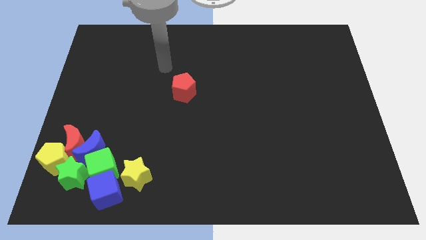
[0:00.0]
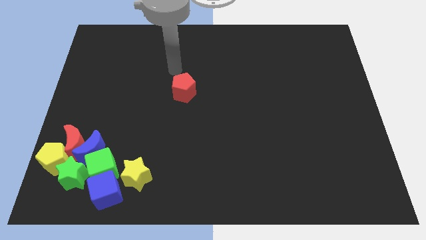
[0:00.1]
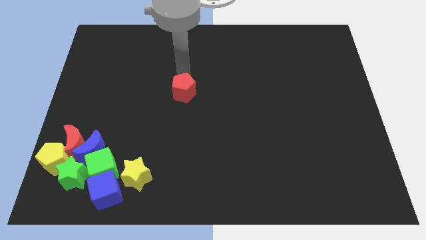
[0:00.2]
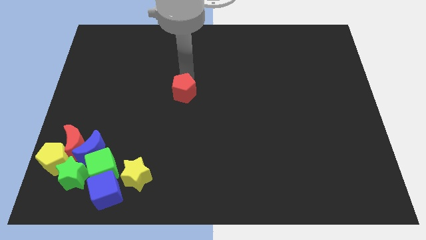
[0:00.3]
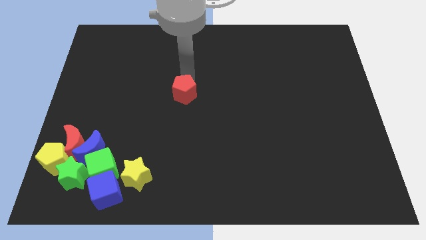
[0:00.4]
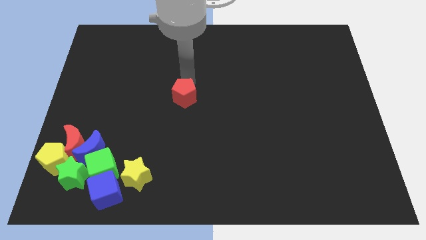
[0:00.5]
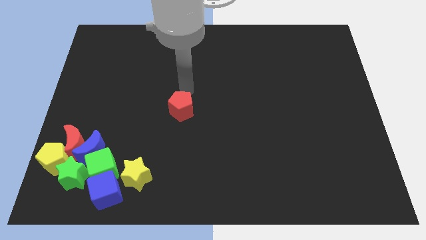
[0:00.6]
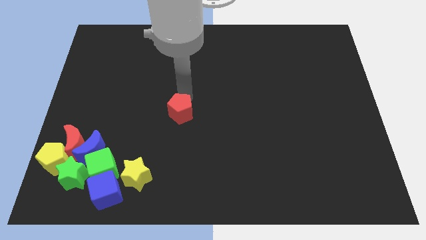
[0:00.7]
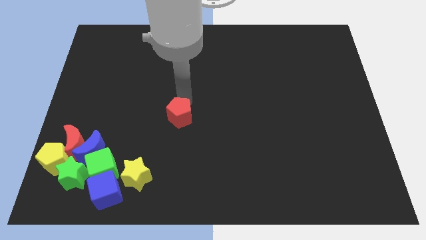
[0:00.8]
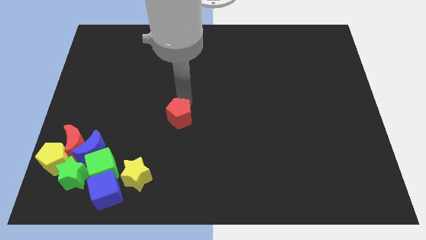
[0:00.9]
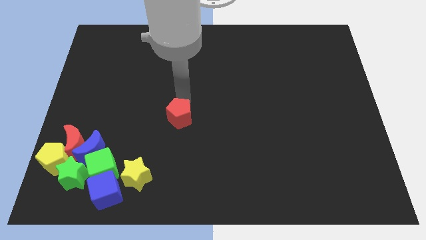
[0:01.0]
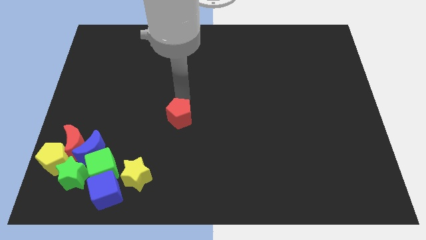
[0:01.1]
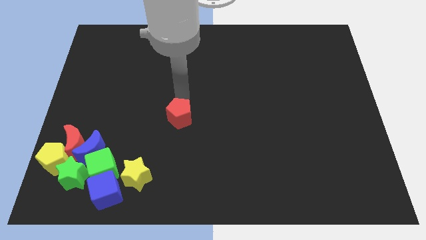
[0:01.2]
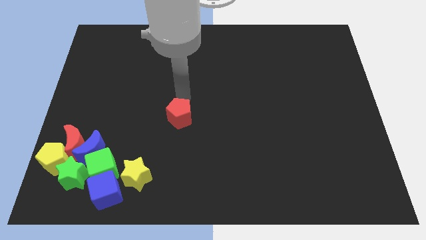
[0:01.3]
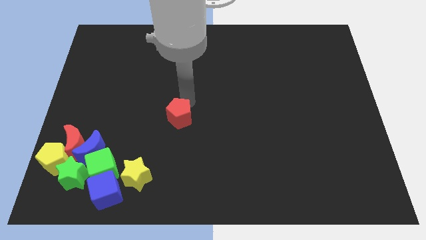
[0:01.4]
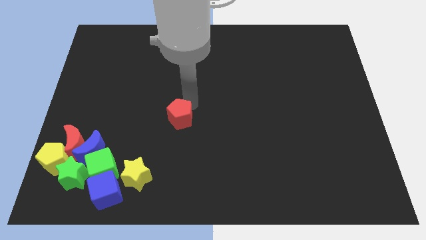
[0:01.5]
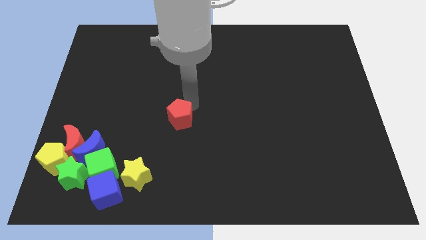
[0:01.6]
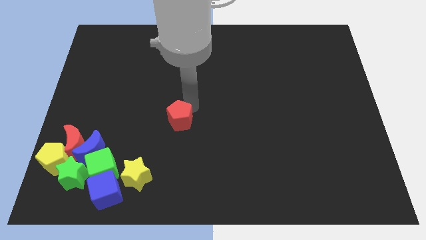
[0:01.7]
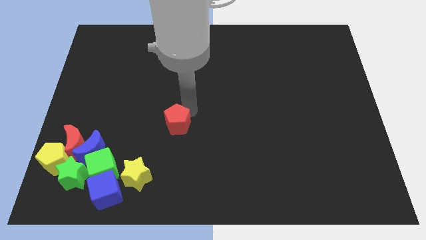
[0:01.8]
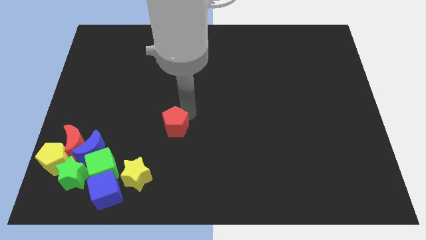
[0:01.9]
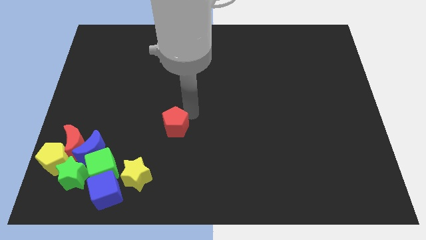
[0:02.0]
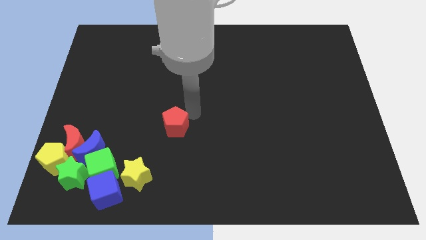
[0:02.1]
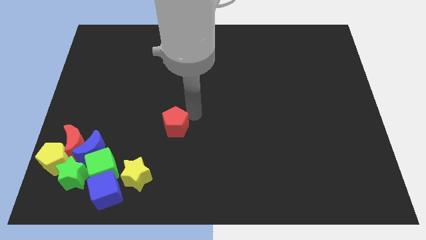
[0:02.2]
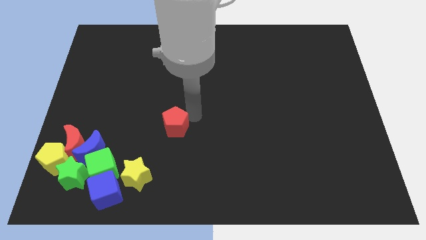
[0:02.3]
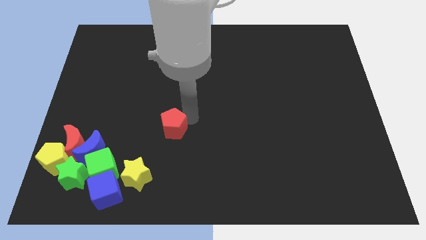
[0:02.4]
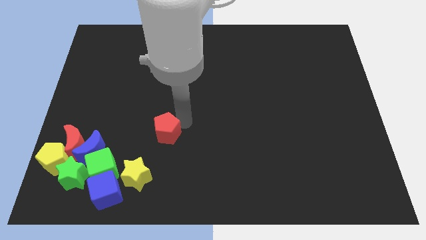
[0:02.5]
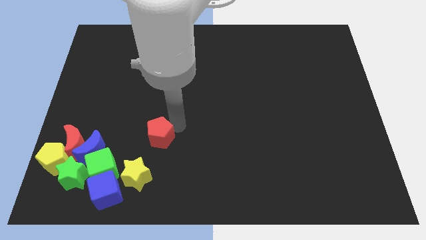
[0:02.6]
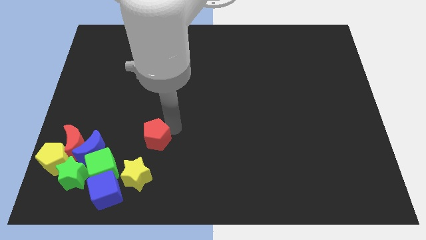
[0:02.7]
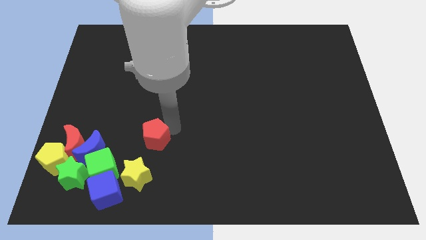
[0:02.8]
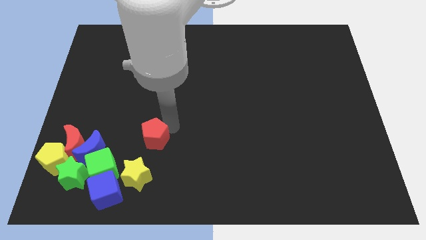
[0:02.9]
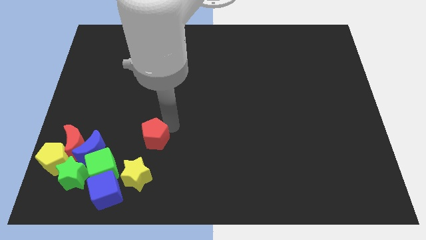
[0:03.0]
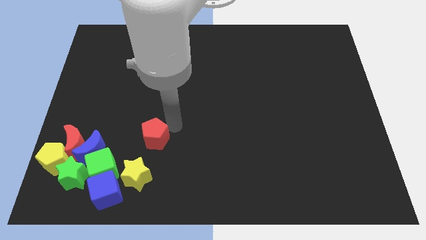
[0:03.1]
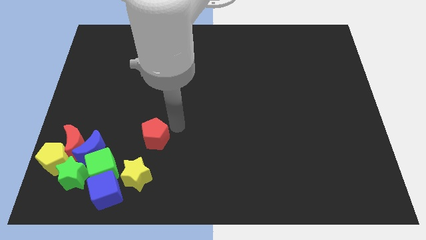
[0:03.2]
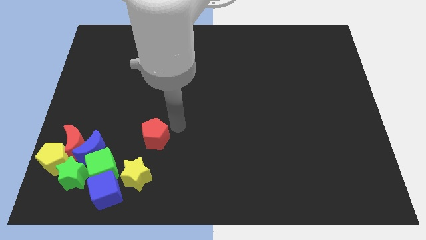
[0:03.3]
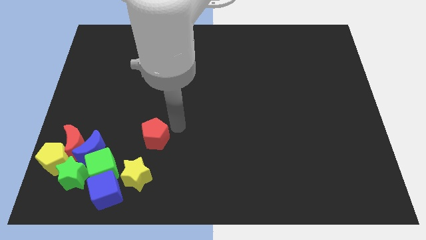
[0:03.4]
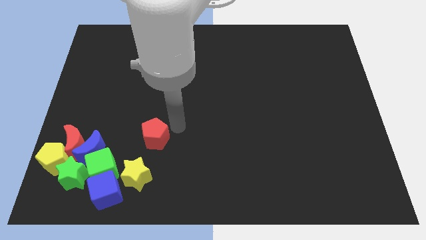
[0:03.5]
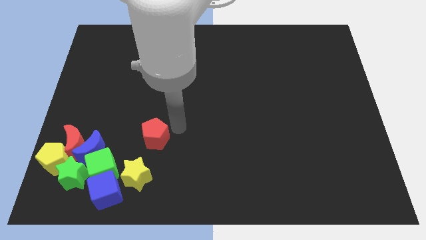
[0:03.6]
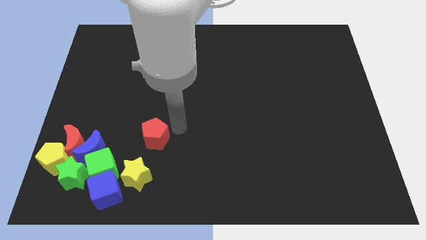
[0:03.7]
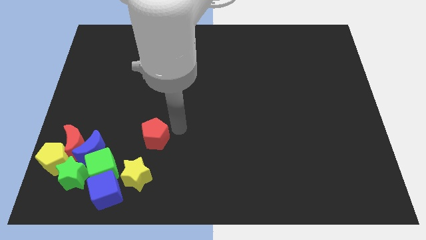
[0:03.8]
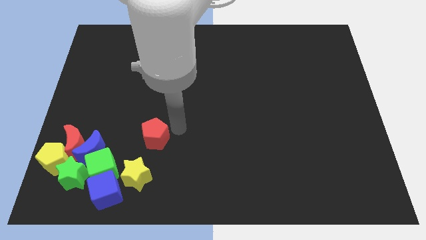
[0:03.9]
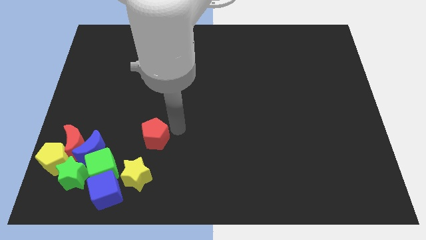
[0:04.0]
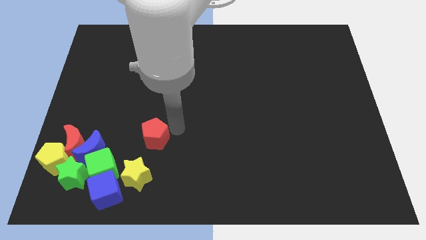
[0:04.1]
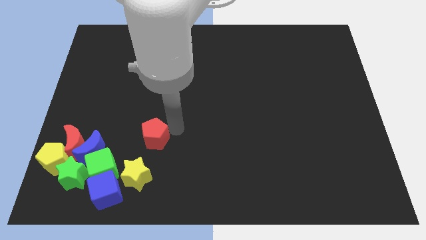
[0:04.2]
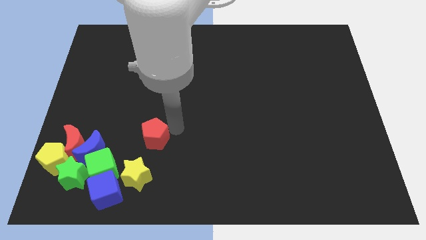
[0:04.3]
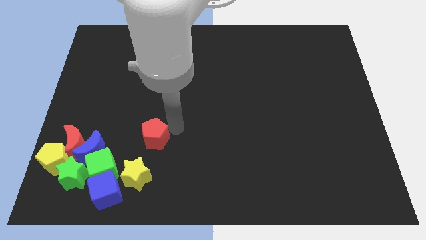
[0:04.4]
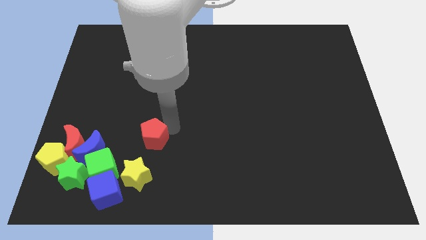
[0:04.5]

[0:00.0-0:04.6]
place the red pentagon on top of the yellow star

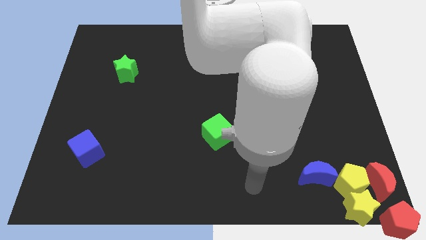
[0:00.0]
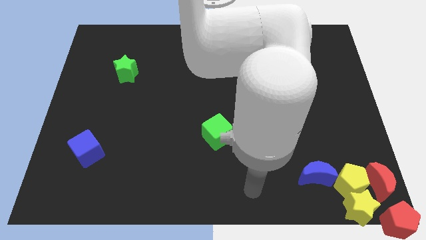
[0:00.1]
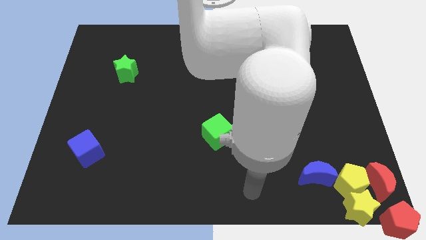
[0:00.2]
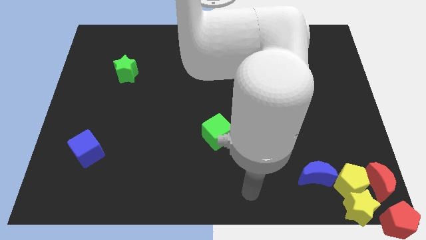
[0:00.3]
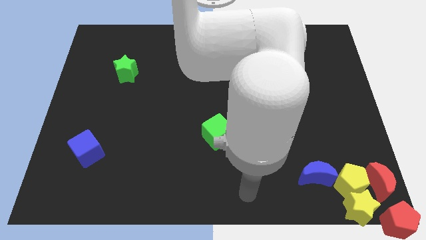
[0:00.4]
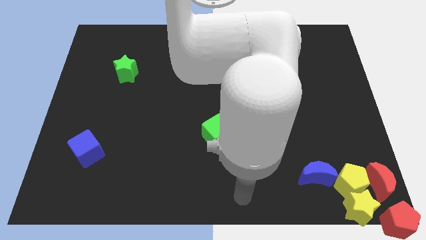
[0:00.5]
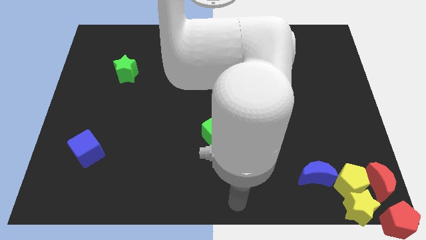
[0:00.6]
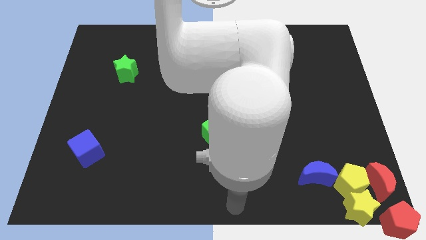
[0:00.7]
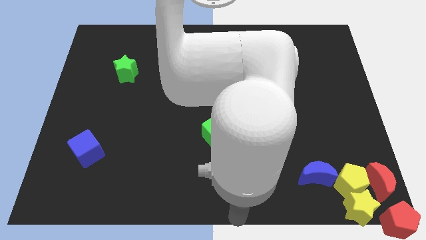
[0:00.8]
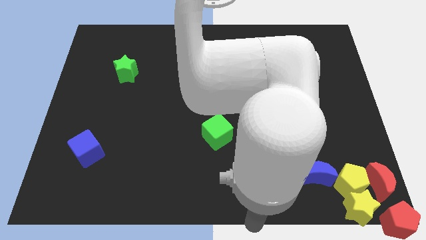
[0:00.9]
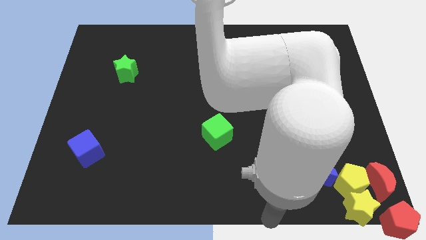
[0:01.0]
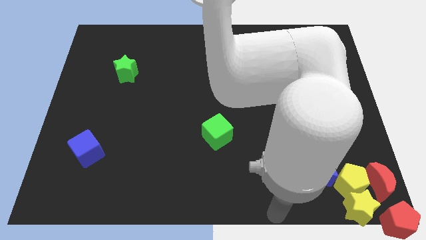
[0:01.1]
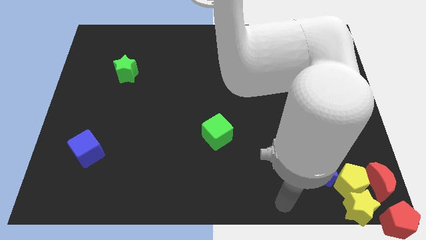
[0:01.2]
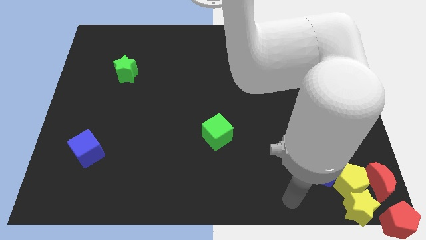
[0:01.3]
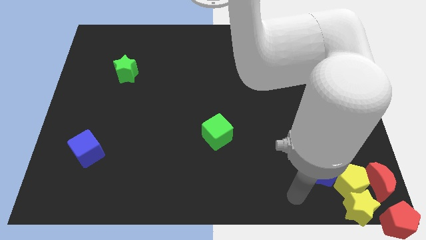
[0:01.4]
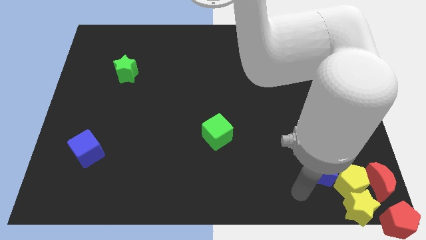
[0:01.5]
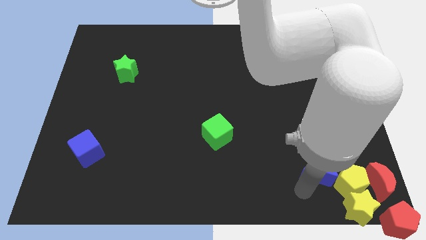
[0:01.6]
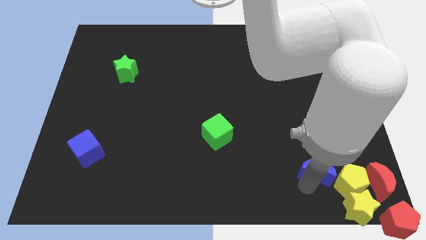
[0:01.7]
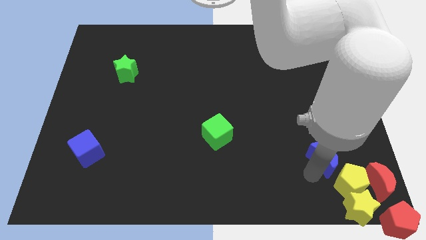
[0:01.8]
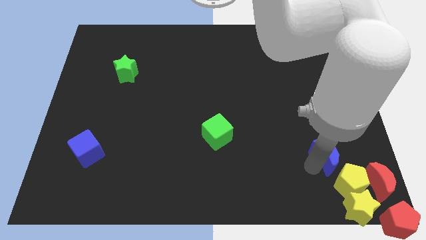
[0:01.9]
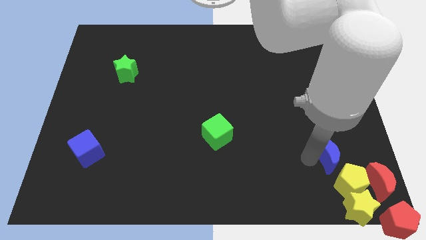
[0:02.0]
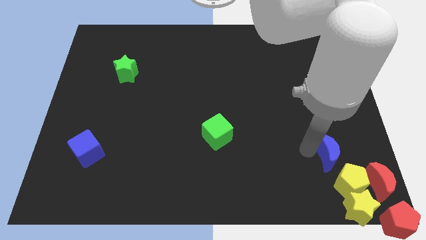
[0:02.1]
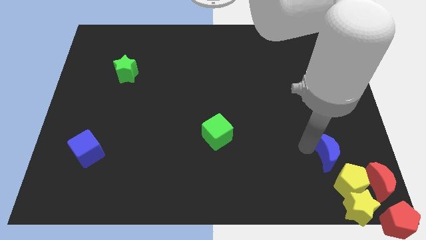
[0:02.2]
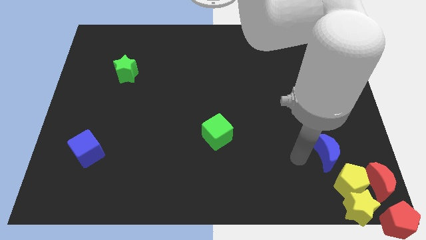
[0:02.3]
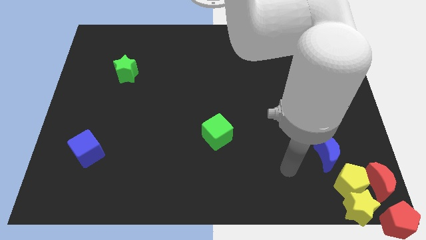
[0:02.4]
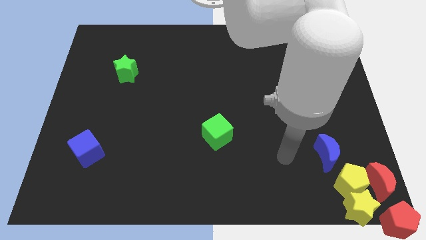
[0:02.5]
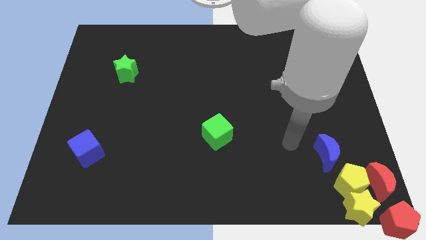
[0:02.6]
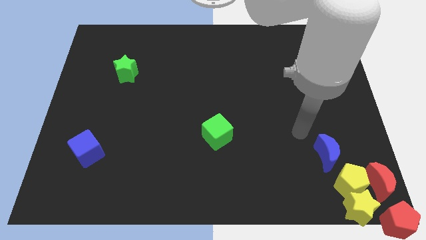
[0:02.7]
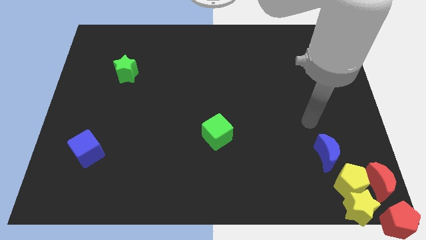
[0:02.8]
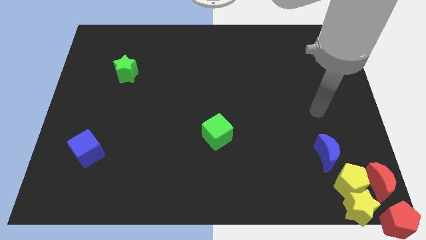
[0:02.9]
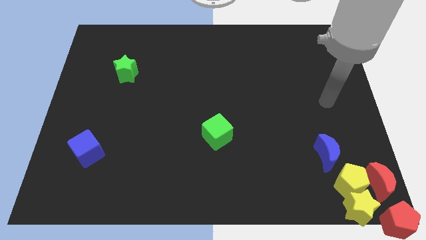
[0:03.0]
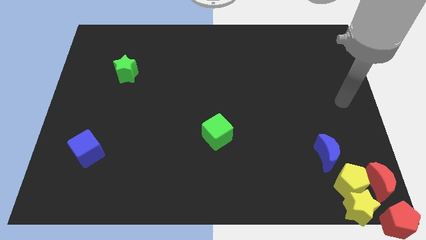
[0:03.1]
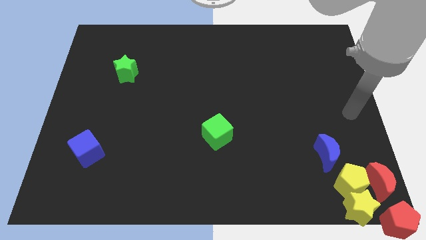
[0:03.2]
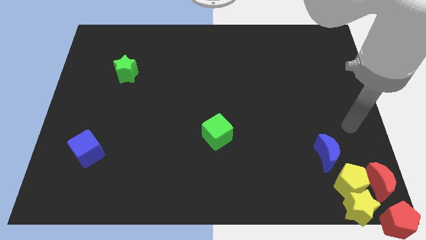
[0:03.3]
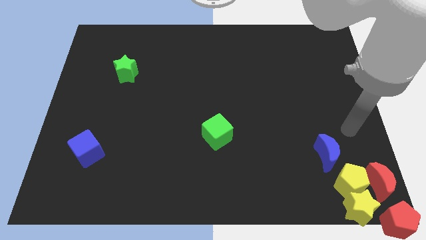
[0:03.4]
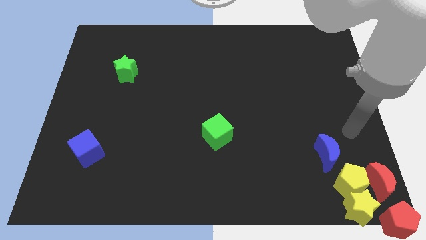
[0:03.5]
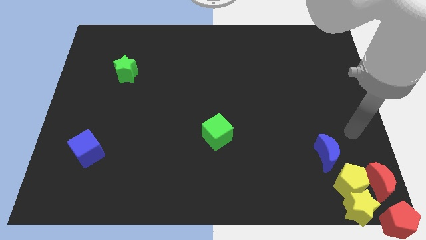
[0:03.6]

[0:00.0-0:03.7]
move the blue moon left above the yellow pentagon

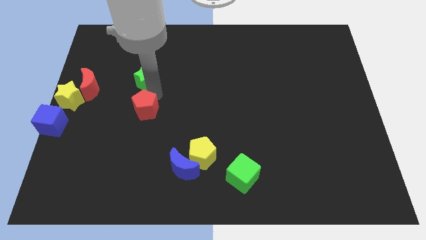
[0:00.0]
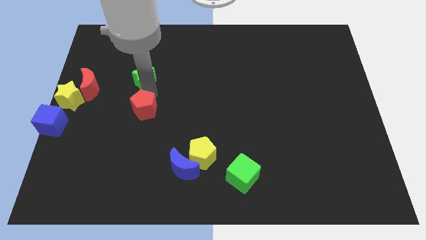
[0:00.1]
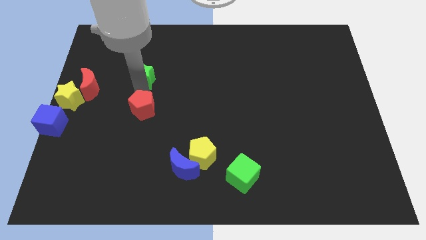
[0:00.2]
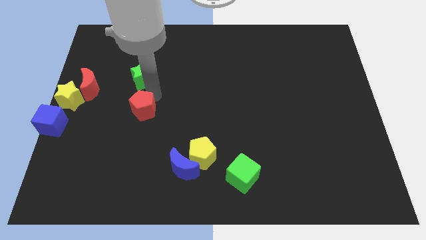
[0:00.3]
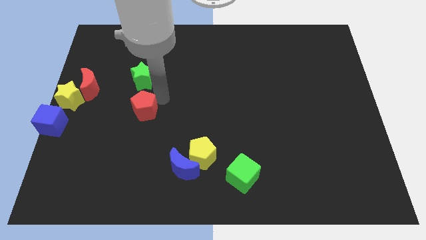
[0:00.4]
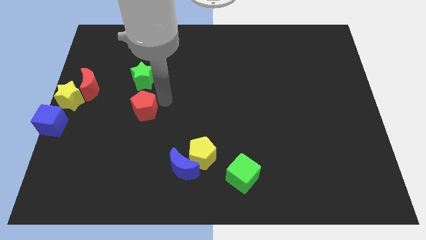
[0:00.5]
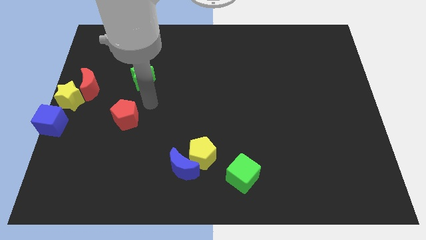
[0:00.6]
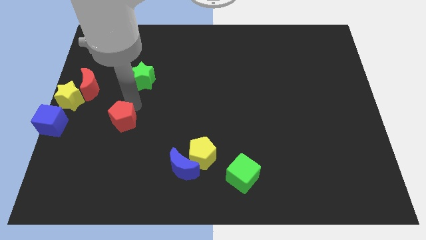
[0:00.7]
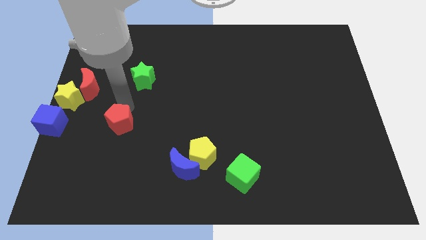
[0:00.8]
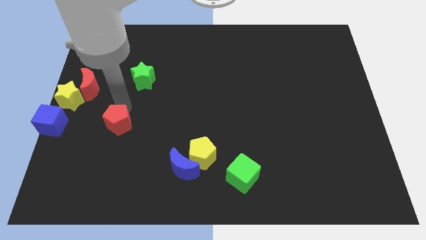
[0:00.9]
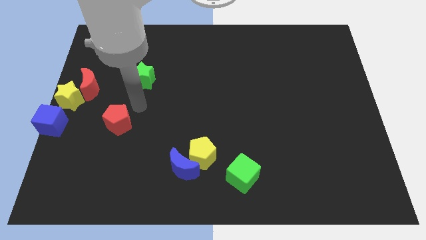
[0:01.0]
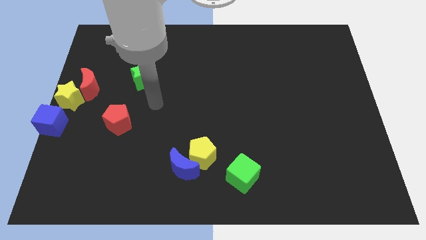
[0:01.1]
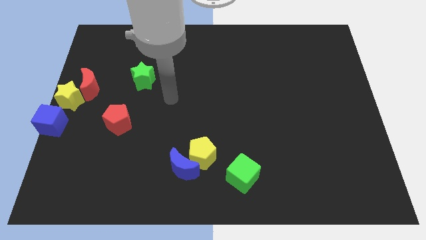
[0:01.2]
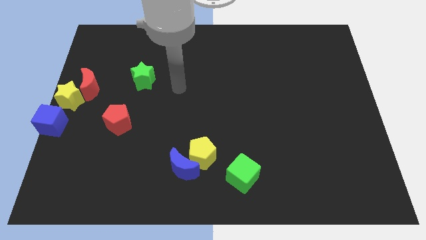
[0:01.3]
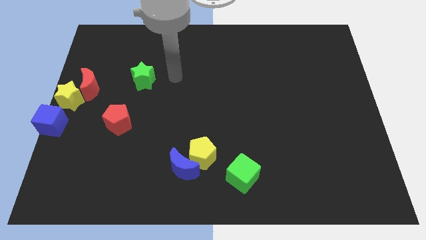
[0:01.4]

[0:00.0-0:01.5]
move the red pentagon away from the green star
